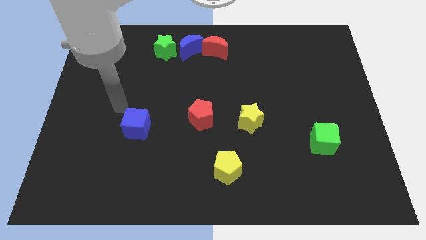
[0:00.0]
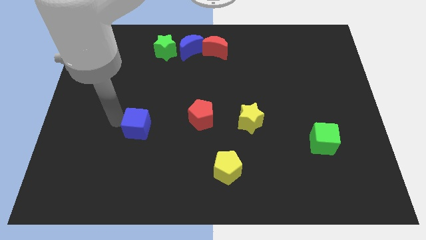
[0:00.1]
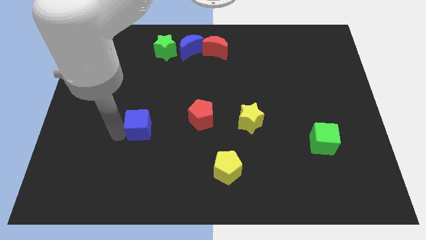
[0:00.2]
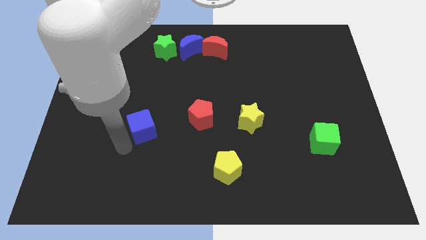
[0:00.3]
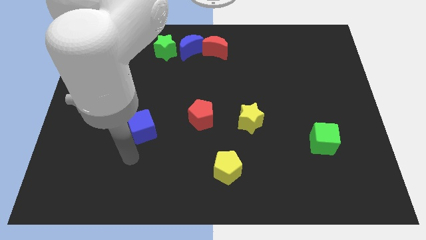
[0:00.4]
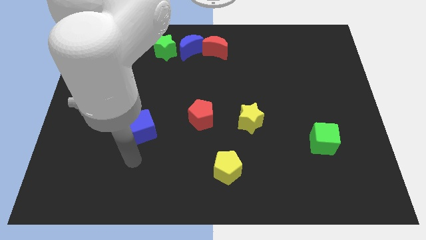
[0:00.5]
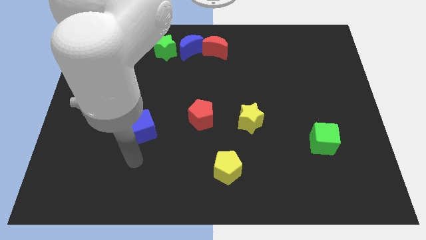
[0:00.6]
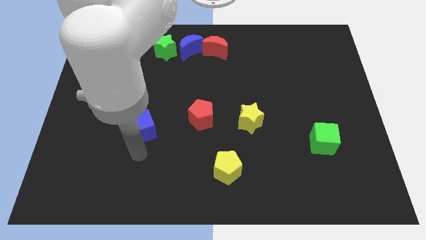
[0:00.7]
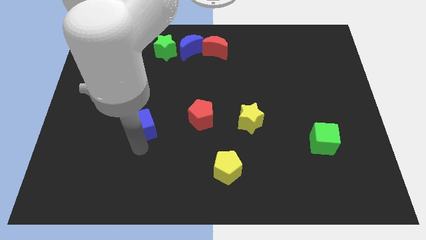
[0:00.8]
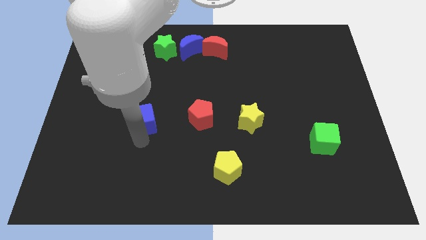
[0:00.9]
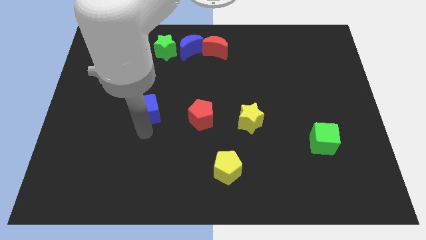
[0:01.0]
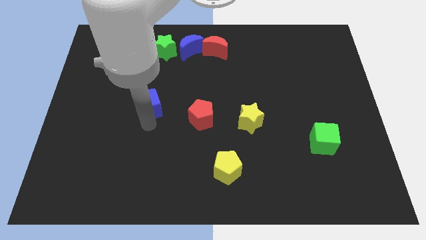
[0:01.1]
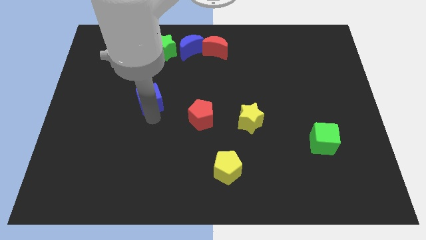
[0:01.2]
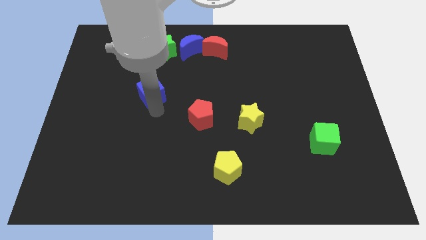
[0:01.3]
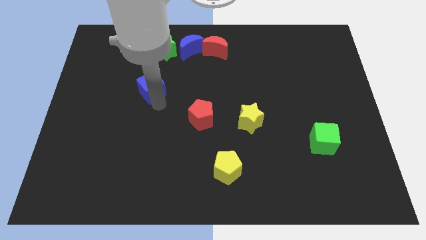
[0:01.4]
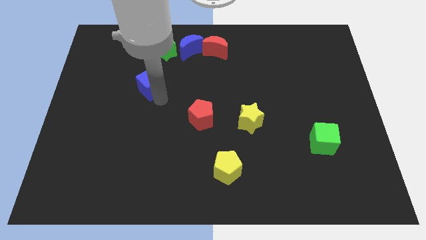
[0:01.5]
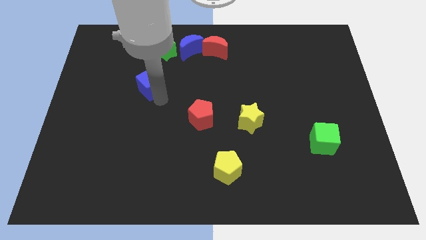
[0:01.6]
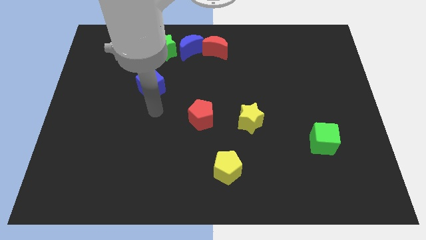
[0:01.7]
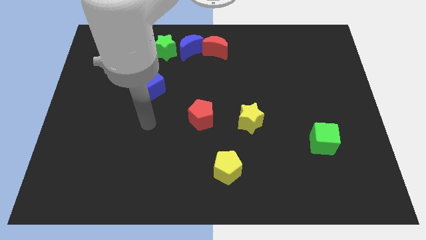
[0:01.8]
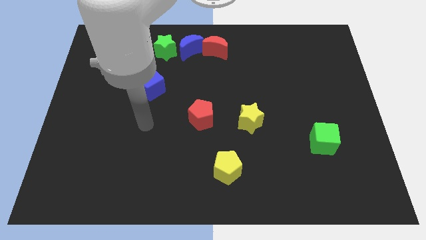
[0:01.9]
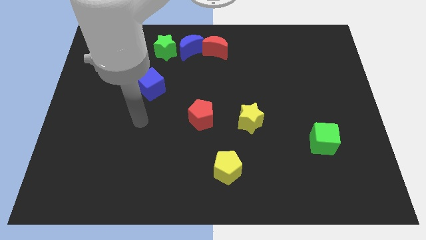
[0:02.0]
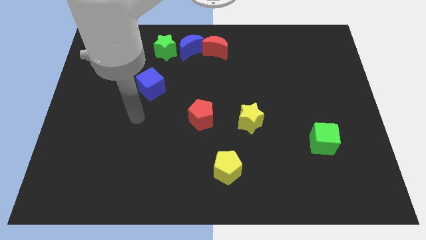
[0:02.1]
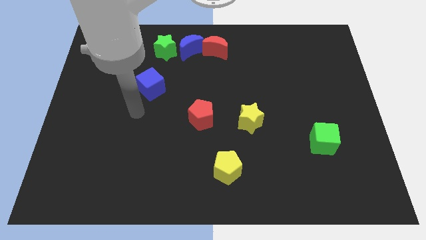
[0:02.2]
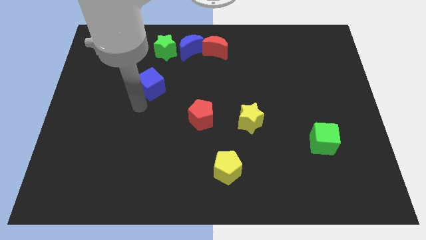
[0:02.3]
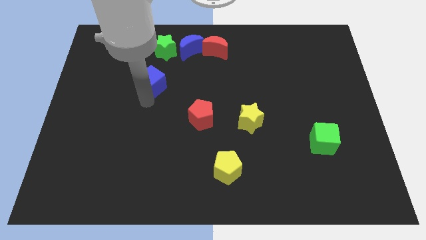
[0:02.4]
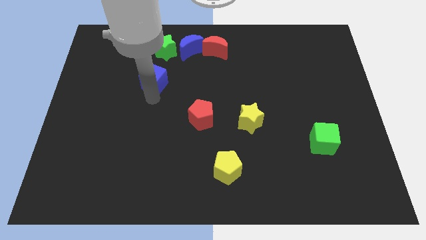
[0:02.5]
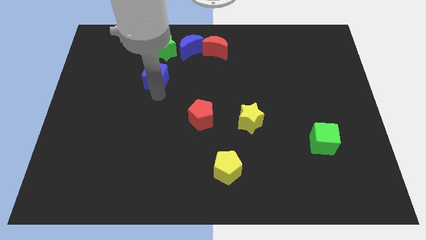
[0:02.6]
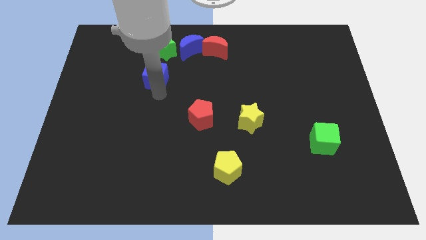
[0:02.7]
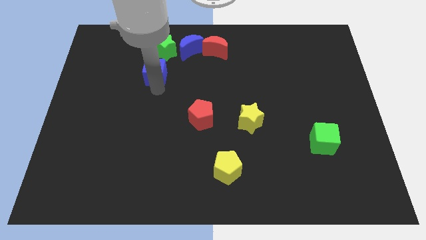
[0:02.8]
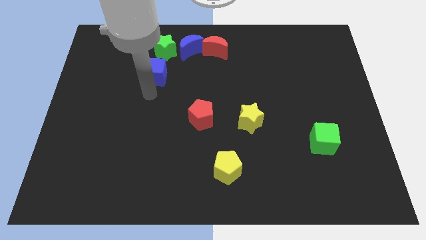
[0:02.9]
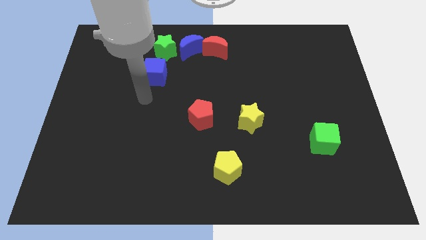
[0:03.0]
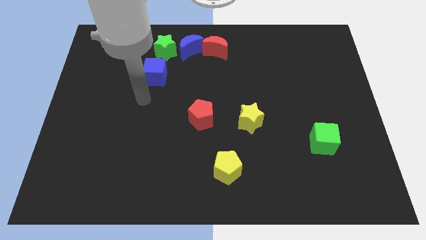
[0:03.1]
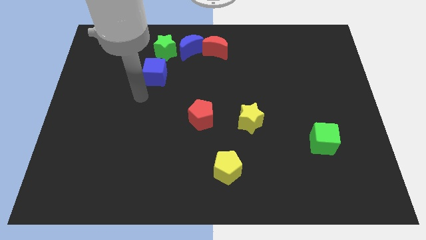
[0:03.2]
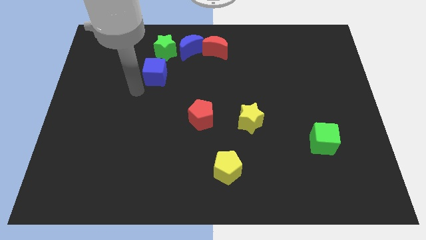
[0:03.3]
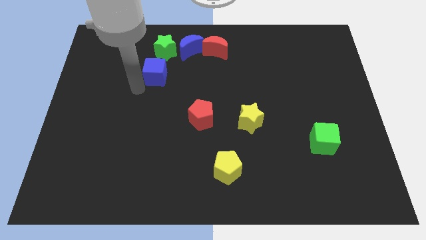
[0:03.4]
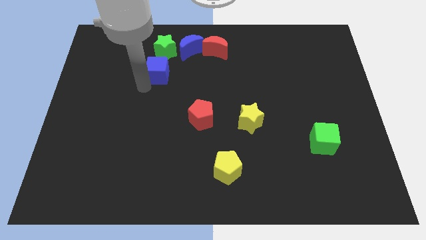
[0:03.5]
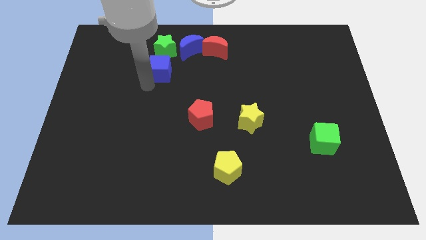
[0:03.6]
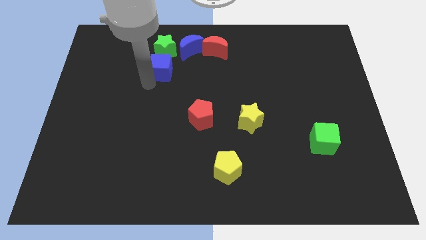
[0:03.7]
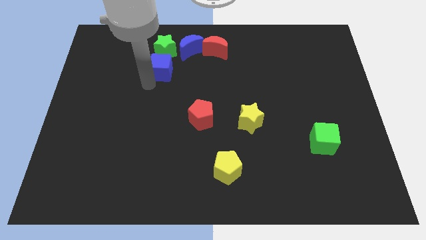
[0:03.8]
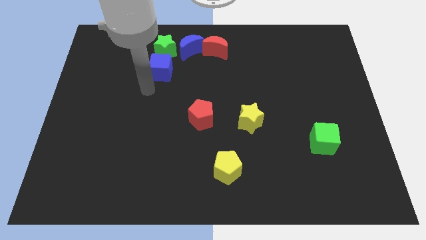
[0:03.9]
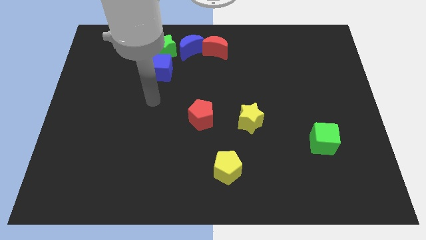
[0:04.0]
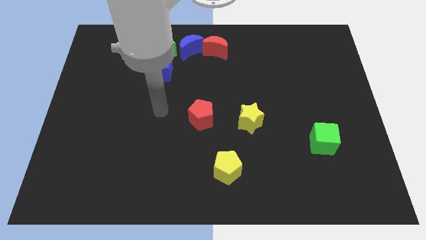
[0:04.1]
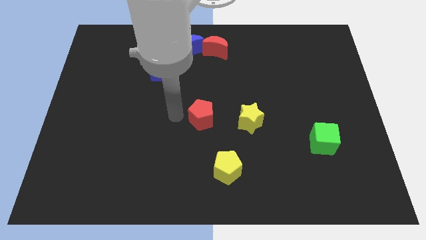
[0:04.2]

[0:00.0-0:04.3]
place the blue cube below the green star

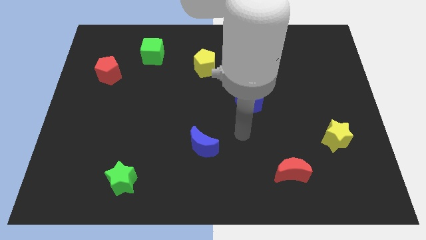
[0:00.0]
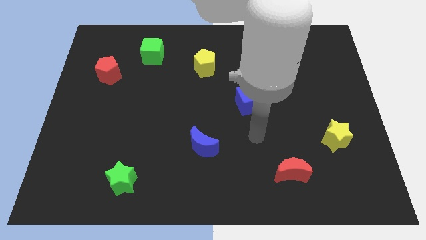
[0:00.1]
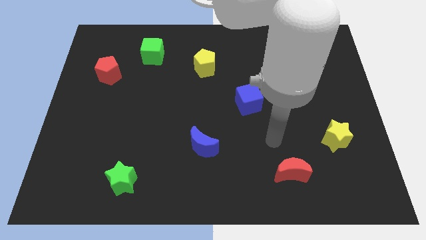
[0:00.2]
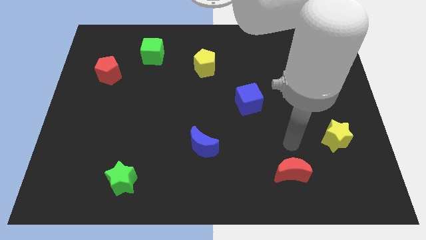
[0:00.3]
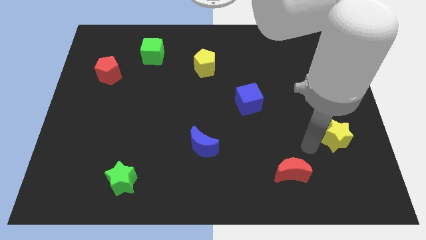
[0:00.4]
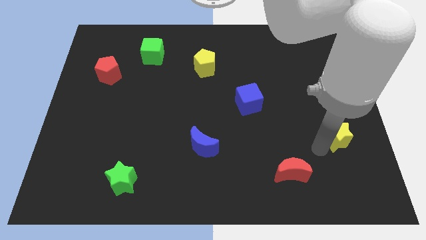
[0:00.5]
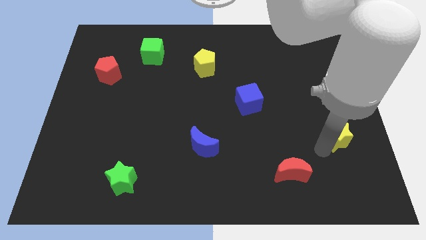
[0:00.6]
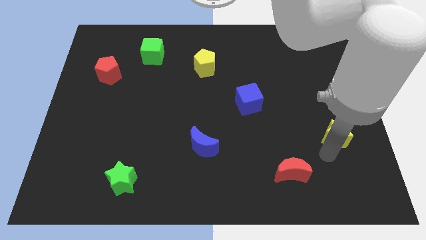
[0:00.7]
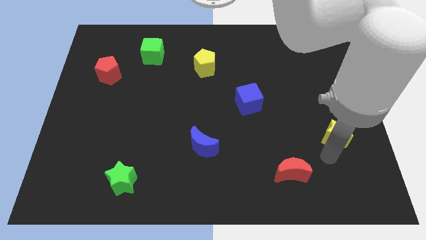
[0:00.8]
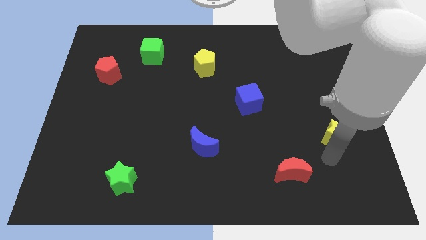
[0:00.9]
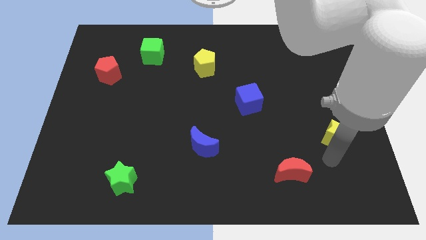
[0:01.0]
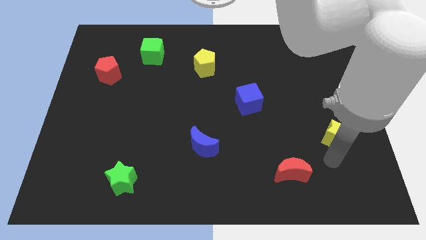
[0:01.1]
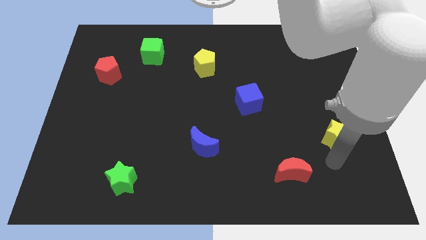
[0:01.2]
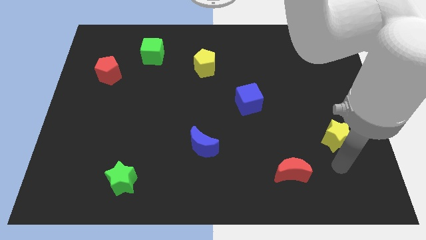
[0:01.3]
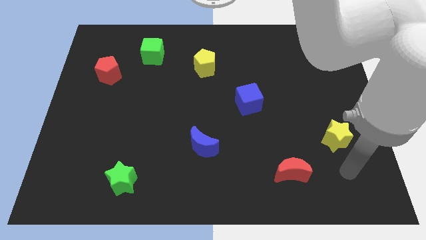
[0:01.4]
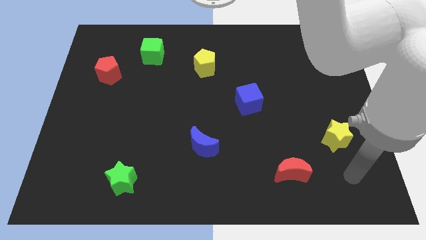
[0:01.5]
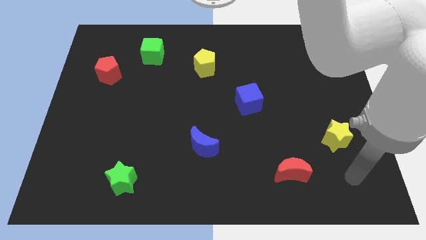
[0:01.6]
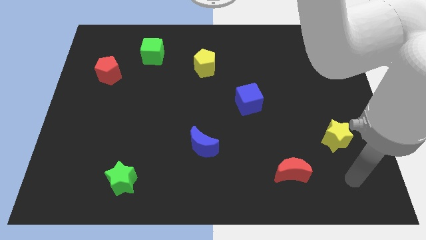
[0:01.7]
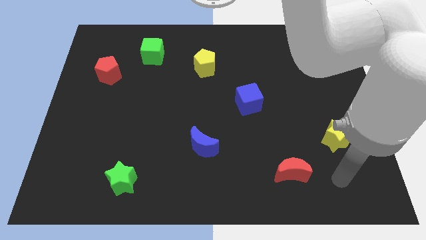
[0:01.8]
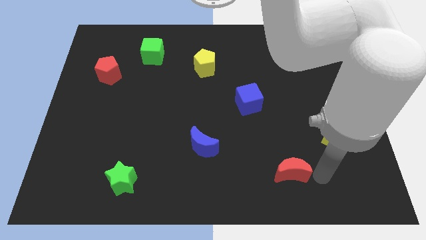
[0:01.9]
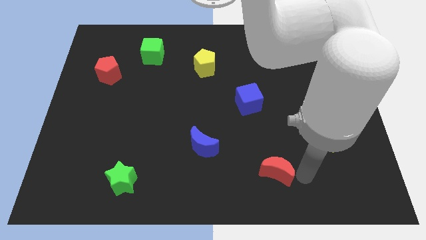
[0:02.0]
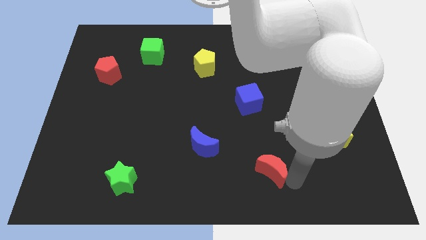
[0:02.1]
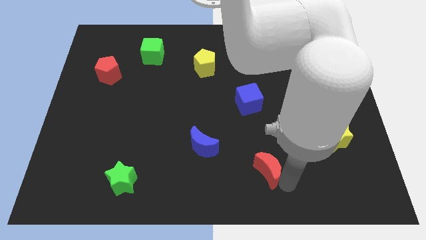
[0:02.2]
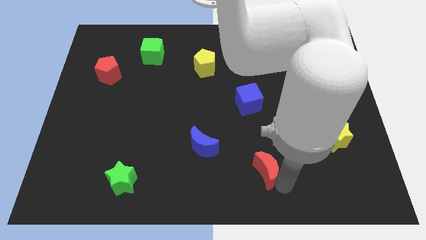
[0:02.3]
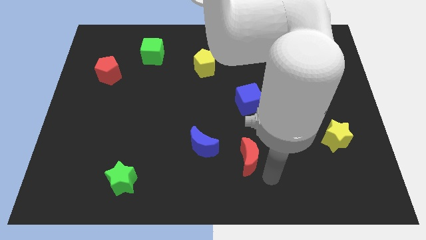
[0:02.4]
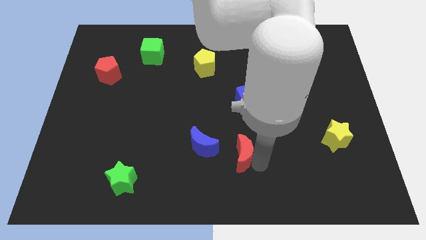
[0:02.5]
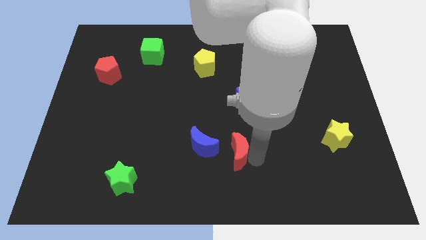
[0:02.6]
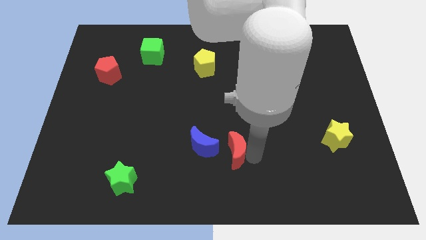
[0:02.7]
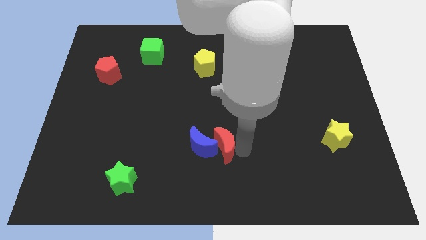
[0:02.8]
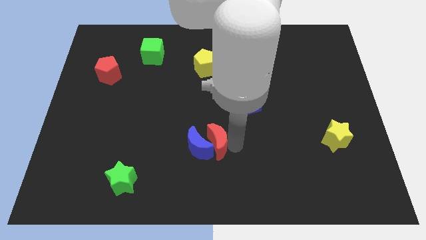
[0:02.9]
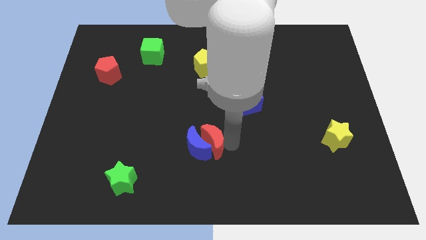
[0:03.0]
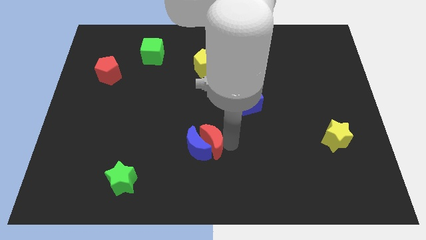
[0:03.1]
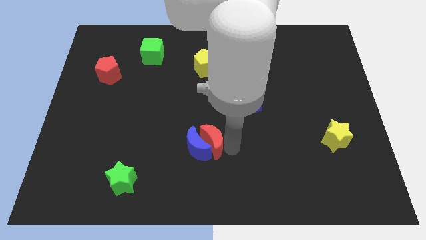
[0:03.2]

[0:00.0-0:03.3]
push the red crescent into the right side of the blue crescent

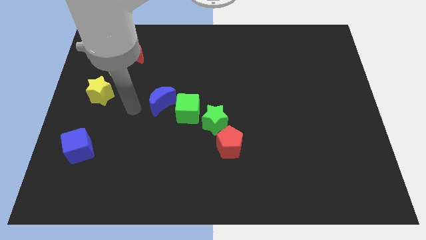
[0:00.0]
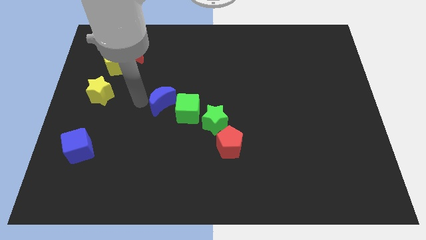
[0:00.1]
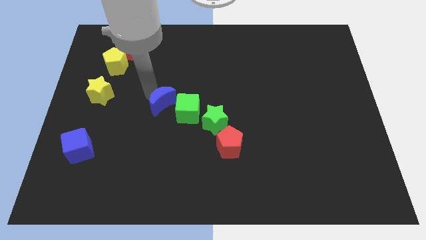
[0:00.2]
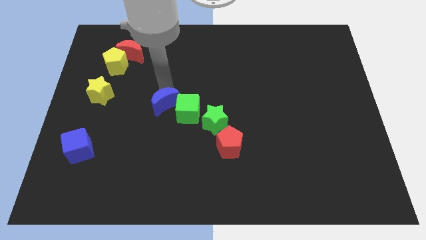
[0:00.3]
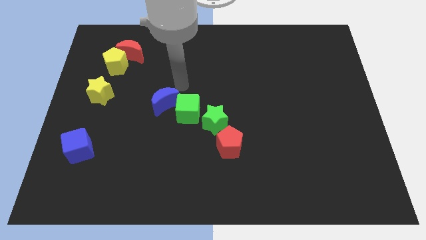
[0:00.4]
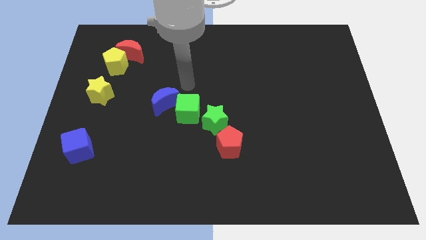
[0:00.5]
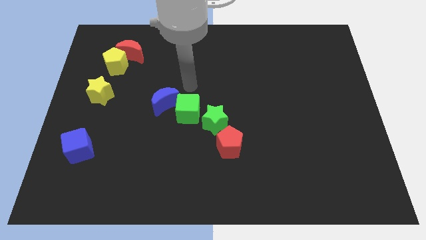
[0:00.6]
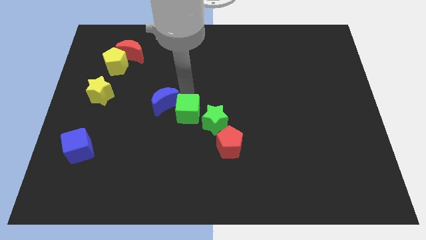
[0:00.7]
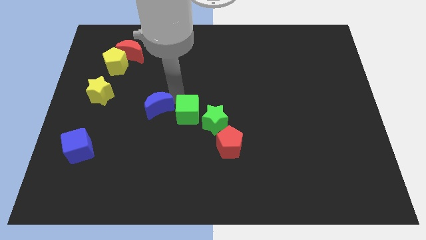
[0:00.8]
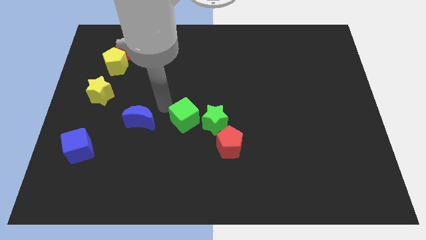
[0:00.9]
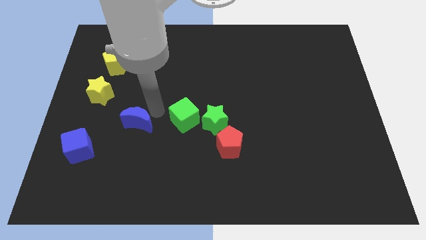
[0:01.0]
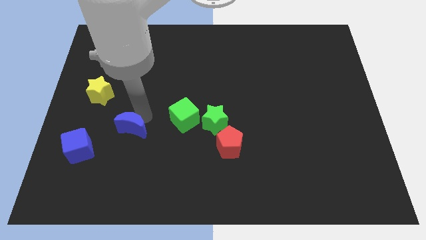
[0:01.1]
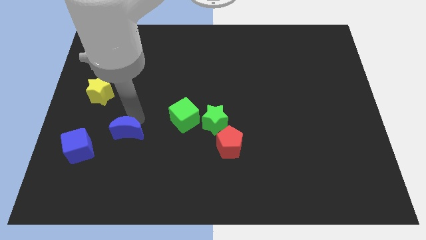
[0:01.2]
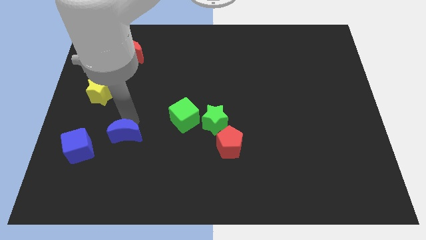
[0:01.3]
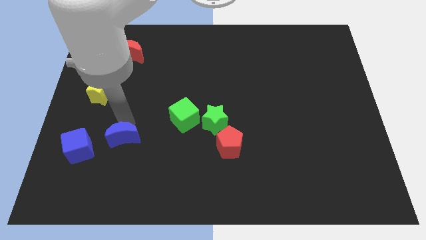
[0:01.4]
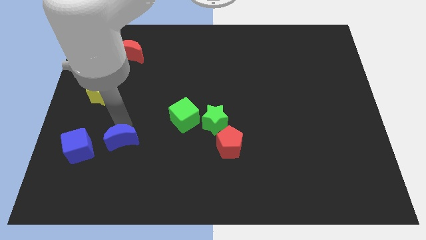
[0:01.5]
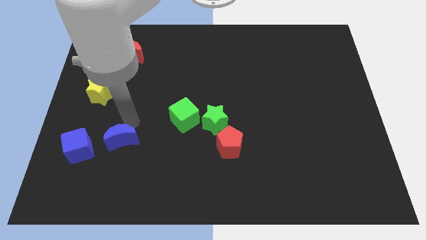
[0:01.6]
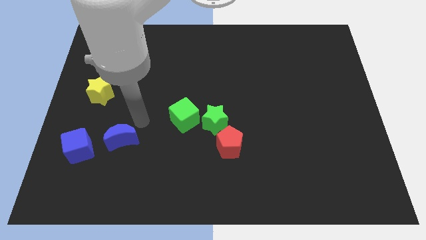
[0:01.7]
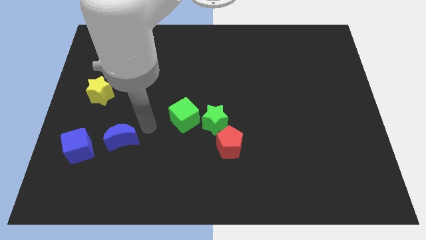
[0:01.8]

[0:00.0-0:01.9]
drag the blue crescent to the top right of blue cube
